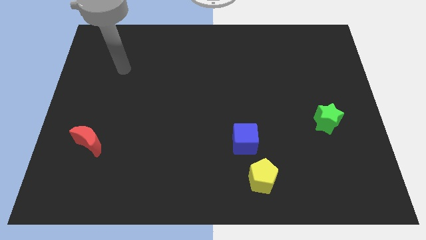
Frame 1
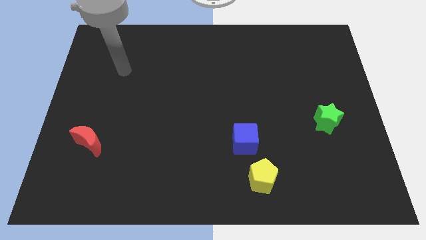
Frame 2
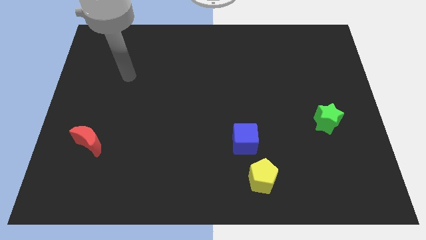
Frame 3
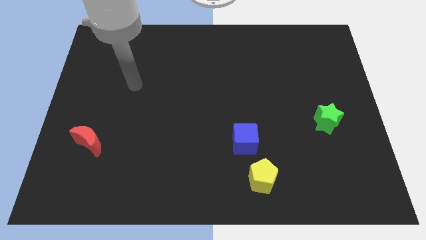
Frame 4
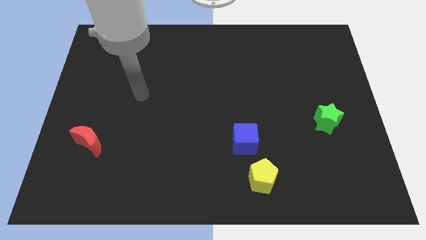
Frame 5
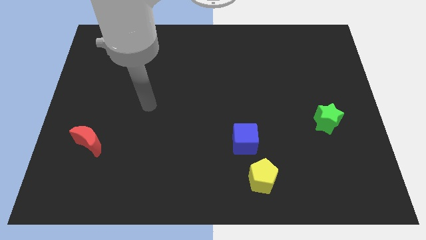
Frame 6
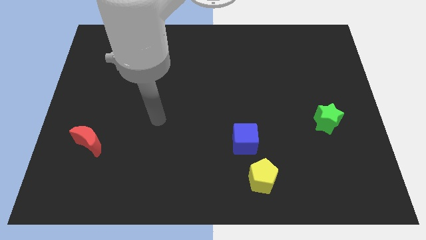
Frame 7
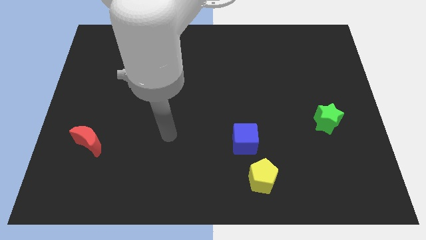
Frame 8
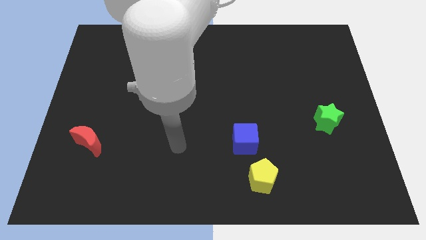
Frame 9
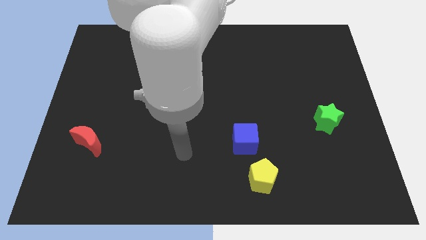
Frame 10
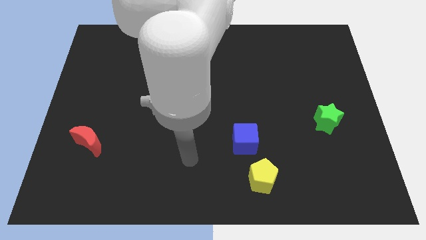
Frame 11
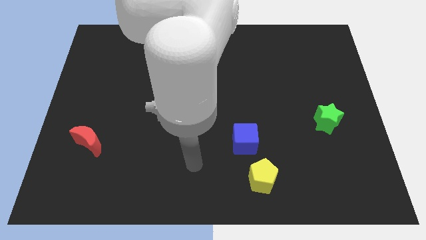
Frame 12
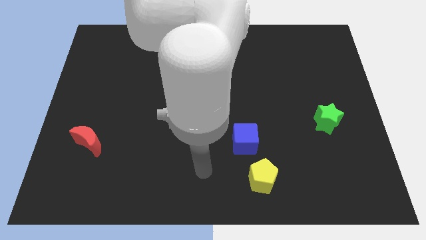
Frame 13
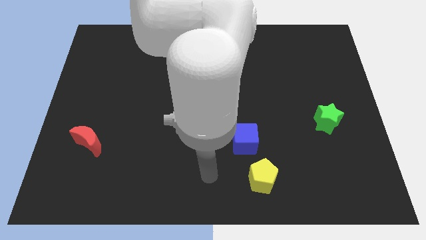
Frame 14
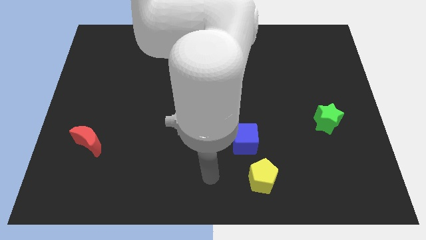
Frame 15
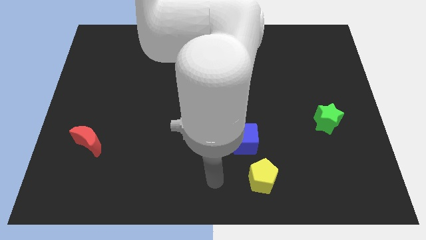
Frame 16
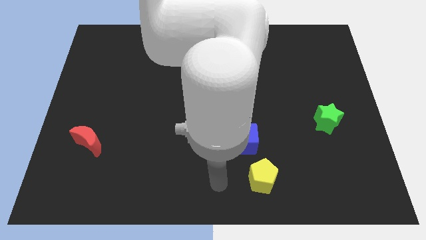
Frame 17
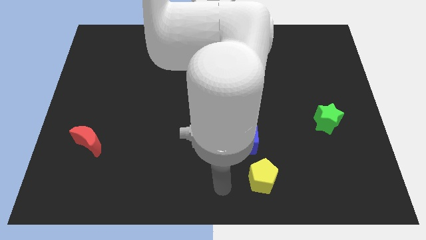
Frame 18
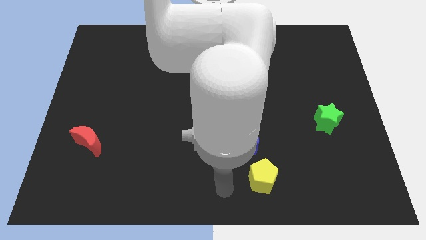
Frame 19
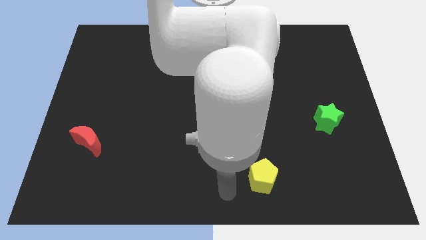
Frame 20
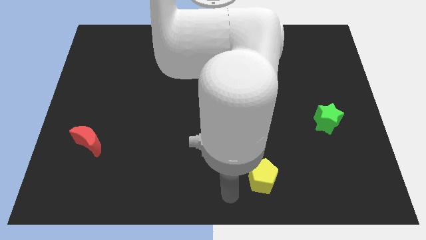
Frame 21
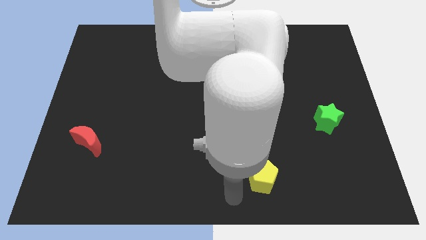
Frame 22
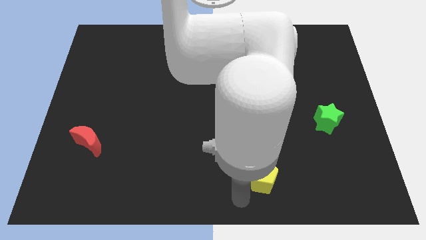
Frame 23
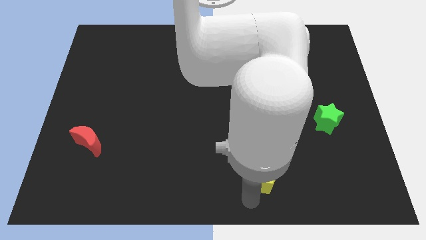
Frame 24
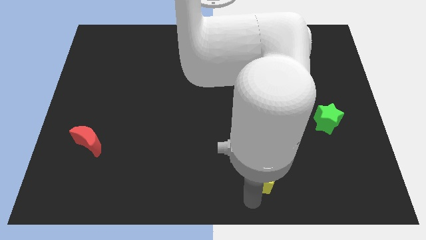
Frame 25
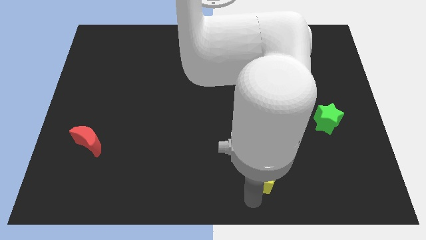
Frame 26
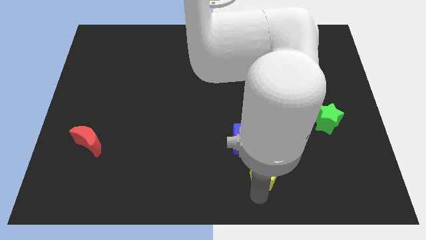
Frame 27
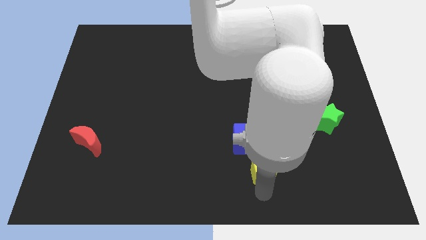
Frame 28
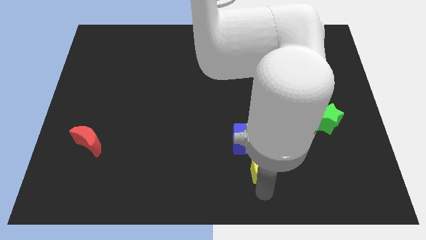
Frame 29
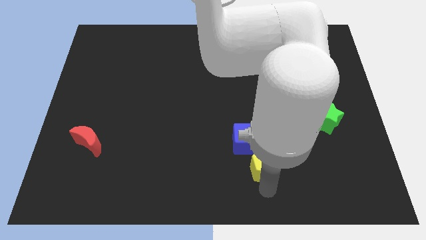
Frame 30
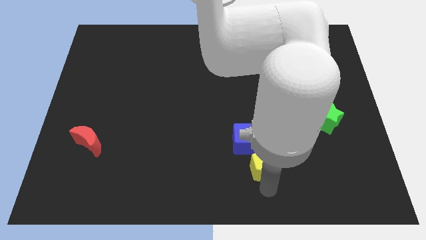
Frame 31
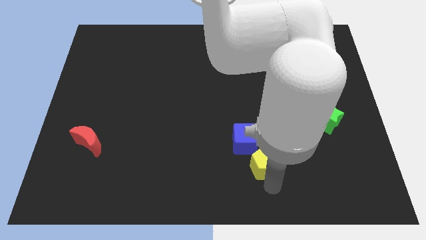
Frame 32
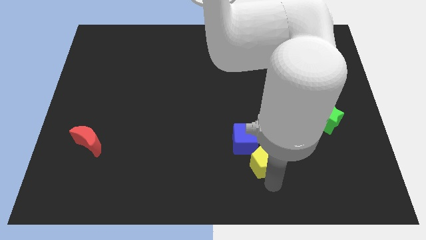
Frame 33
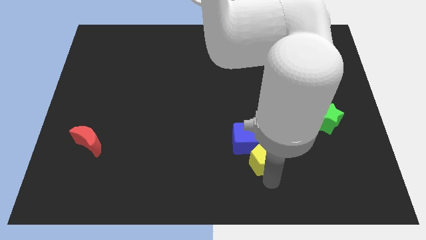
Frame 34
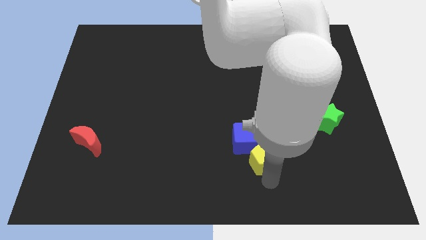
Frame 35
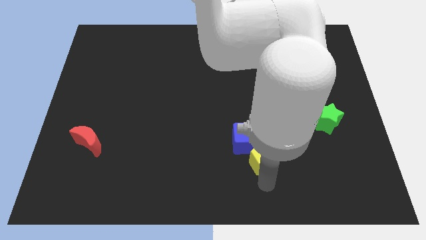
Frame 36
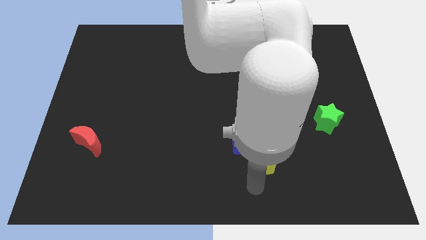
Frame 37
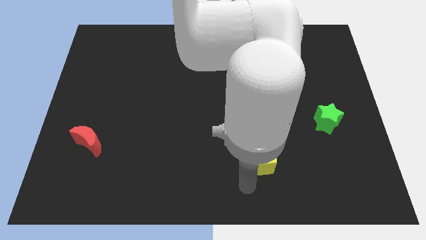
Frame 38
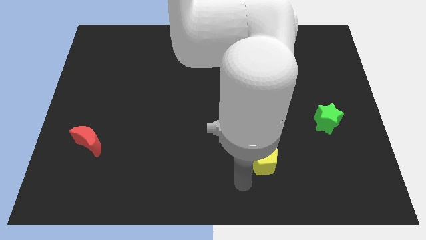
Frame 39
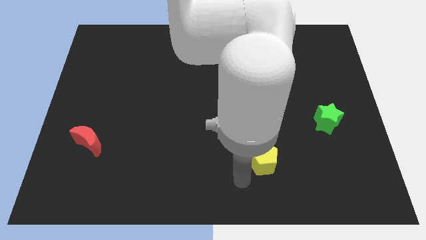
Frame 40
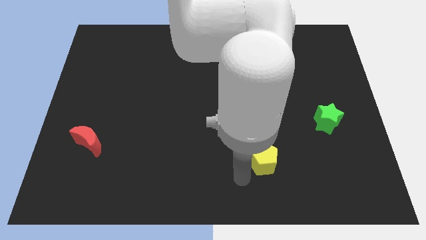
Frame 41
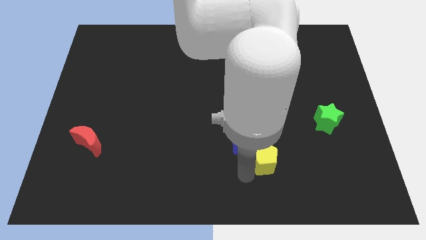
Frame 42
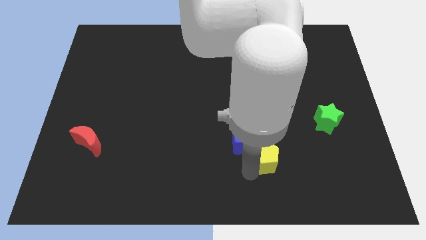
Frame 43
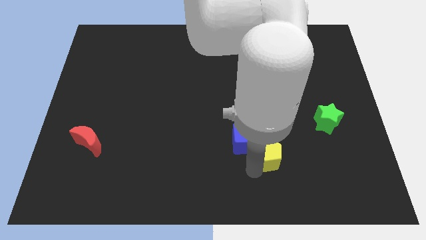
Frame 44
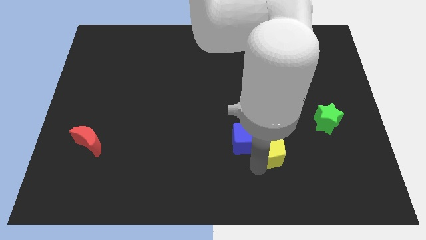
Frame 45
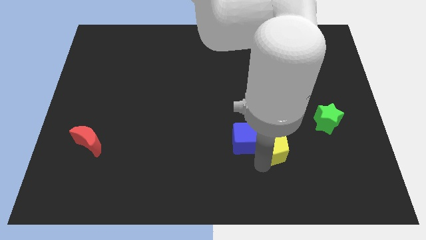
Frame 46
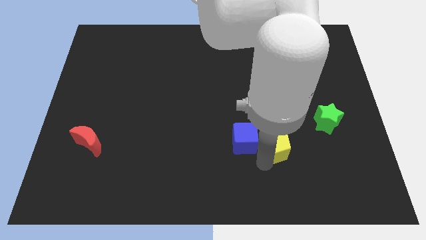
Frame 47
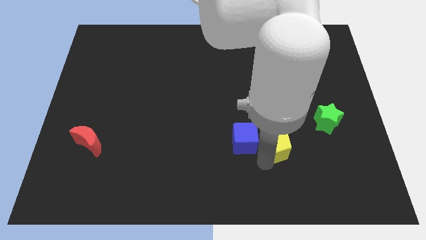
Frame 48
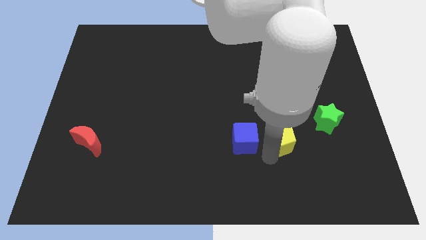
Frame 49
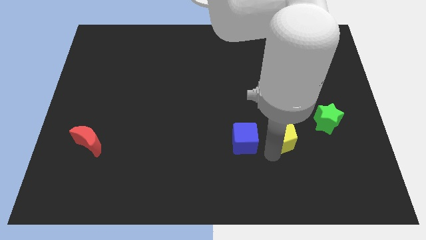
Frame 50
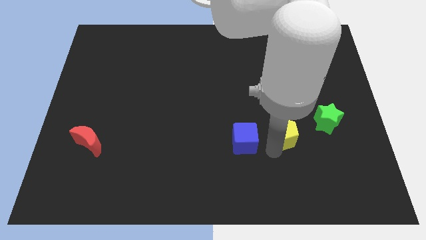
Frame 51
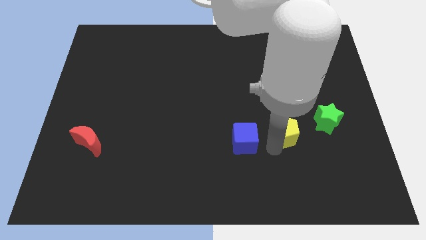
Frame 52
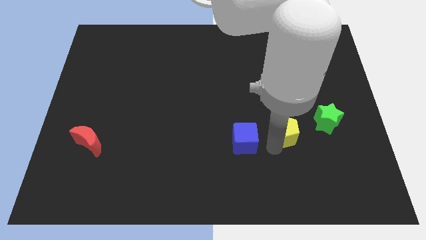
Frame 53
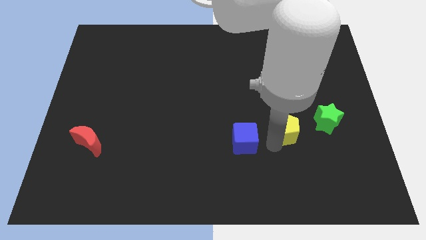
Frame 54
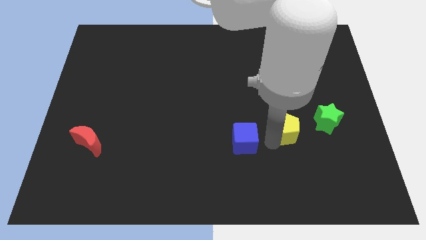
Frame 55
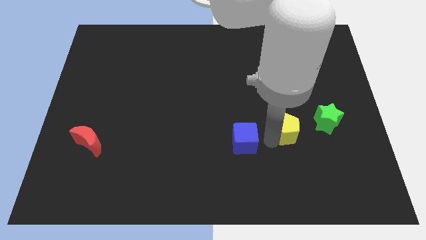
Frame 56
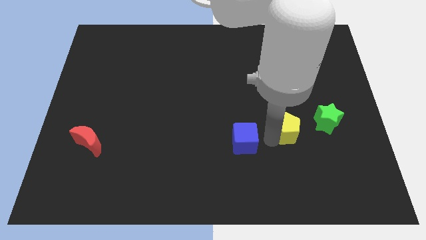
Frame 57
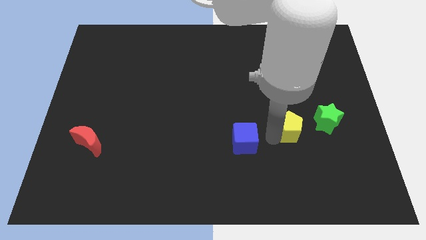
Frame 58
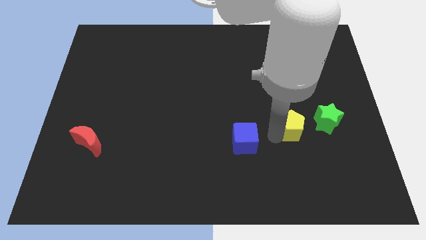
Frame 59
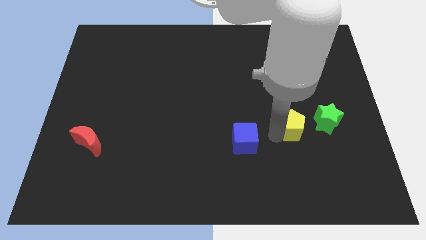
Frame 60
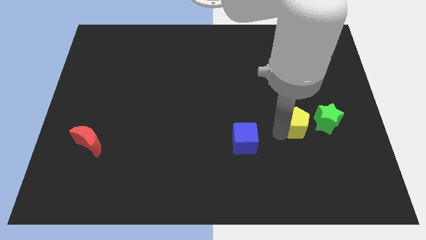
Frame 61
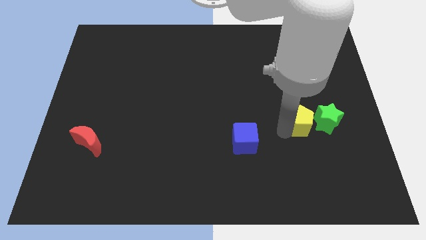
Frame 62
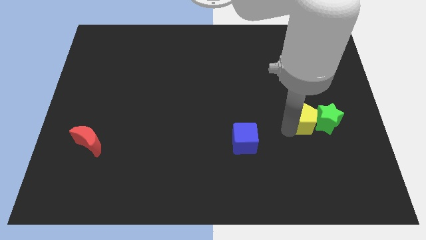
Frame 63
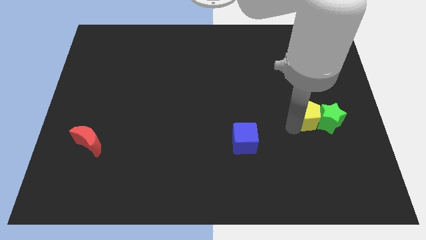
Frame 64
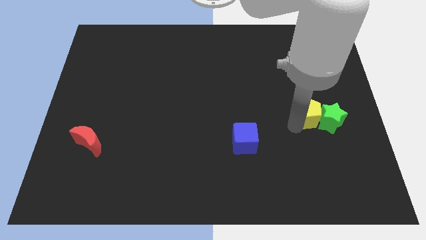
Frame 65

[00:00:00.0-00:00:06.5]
push the yellow block to the green star

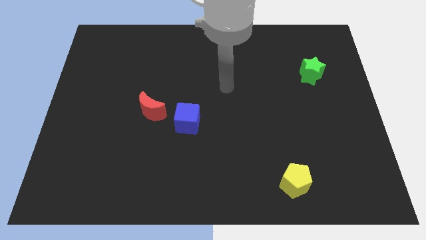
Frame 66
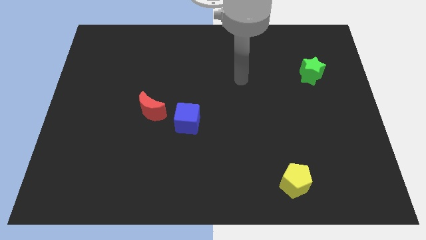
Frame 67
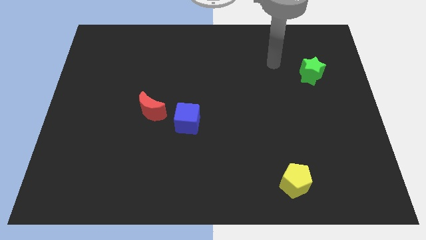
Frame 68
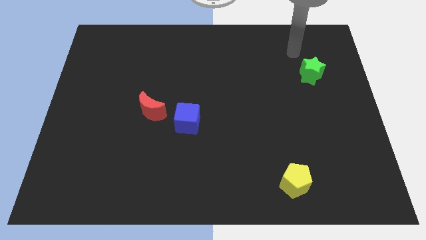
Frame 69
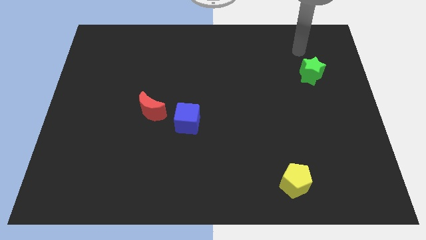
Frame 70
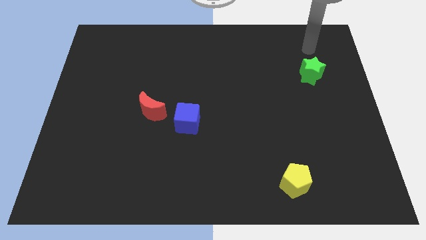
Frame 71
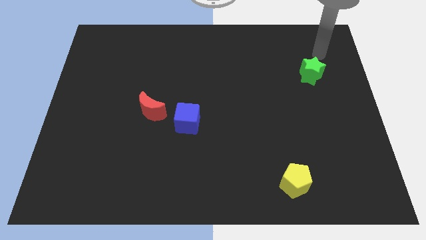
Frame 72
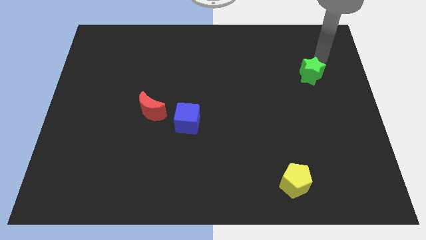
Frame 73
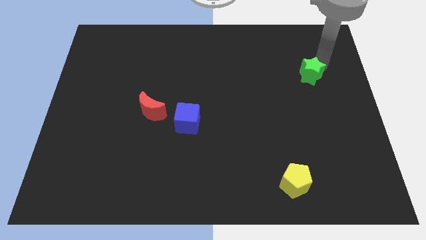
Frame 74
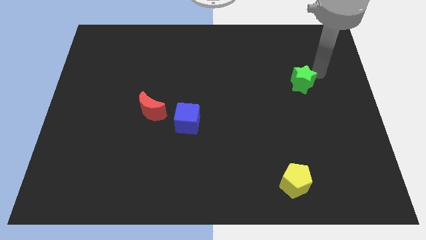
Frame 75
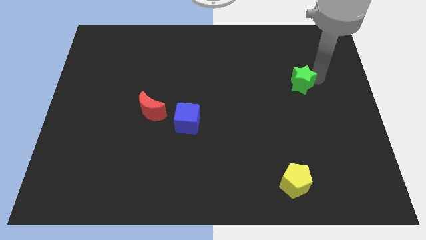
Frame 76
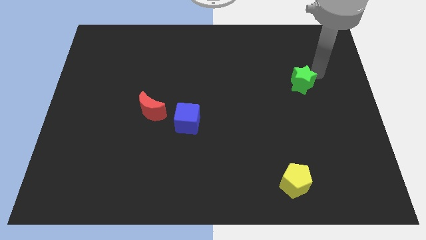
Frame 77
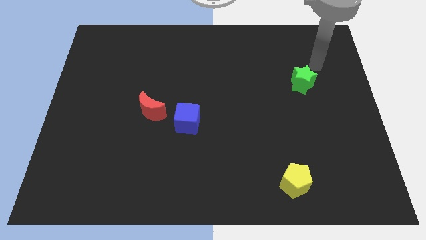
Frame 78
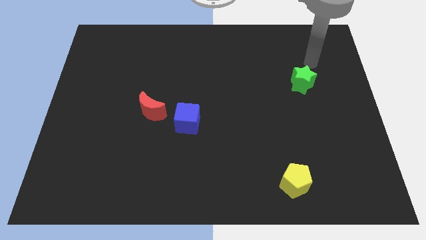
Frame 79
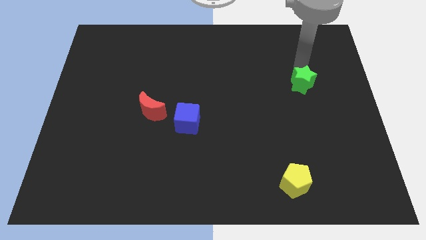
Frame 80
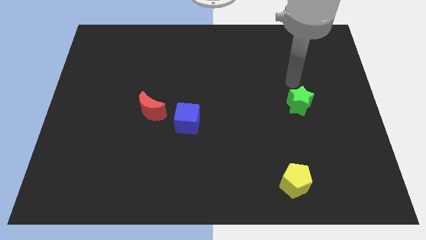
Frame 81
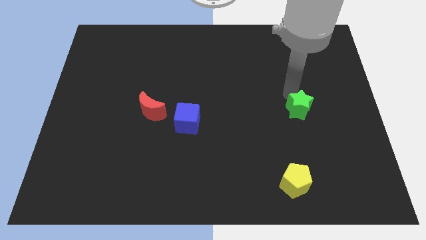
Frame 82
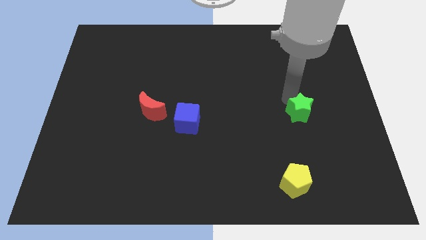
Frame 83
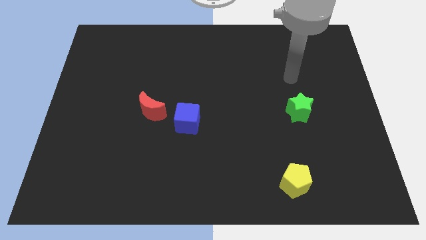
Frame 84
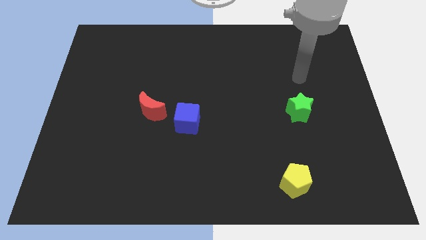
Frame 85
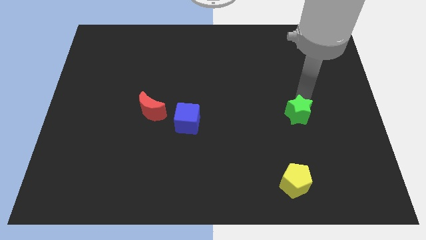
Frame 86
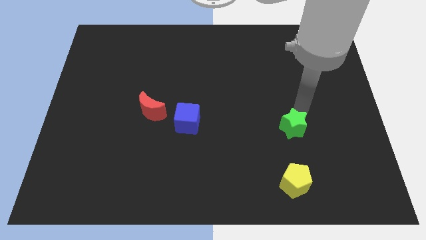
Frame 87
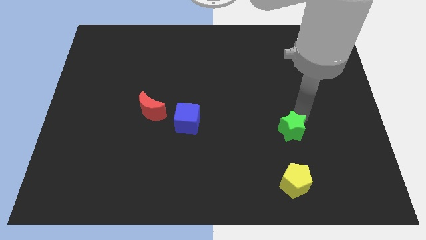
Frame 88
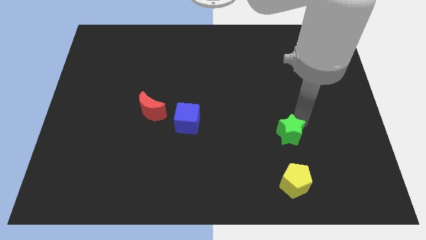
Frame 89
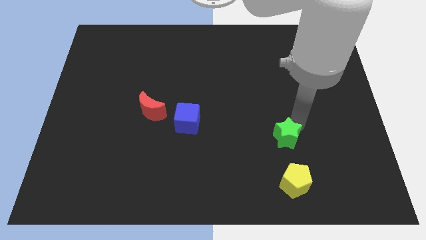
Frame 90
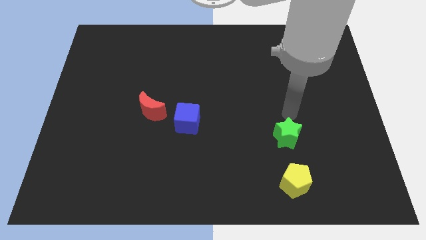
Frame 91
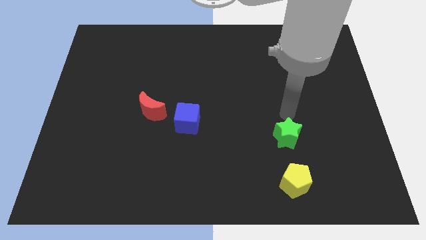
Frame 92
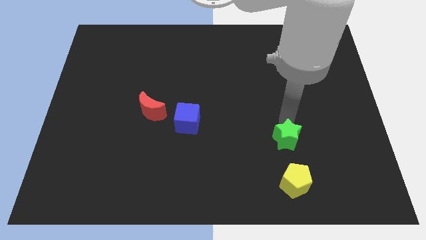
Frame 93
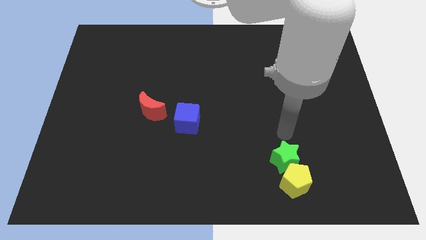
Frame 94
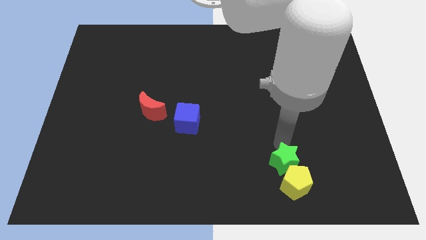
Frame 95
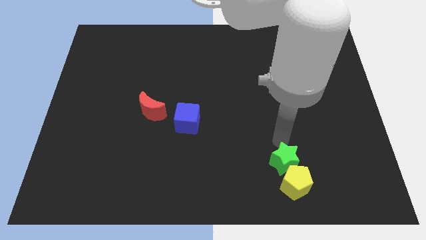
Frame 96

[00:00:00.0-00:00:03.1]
slide the green star to the pentagon
